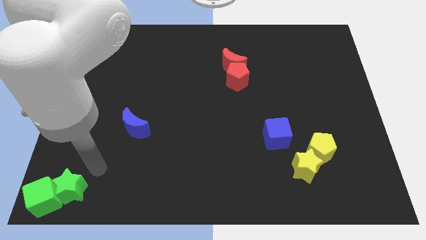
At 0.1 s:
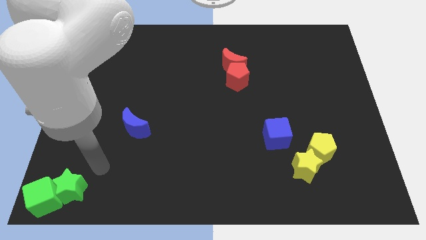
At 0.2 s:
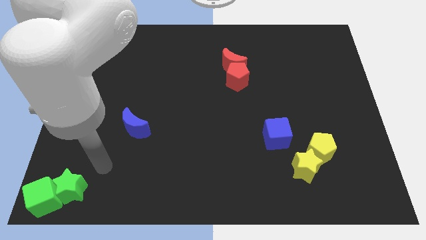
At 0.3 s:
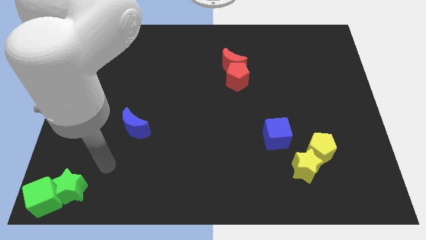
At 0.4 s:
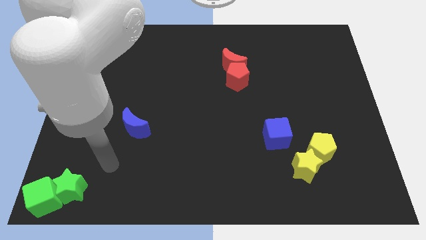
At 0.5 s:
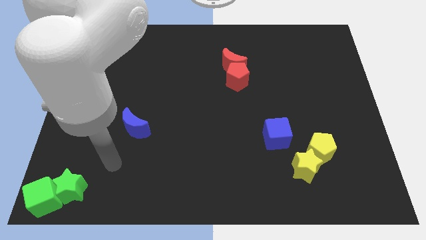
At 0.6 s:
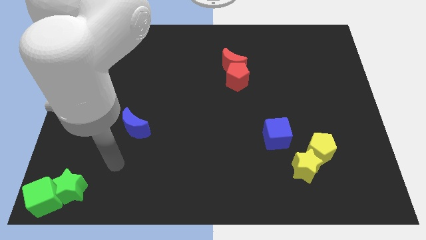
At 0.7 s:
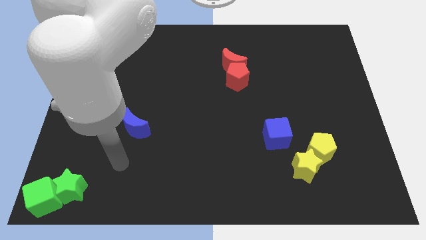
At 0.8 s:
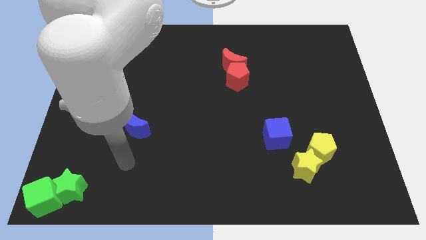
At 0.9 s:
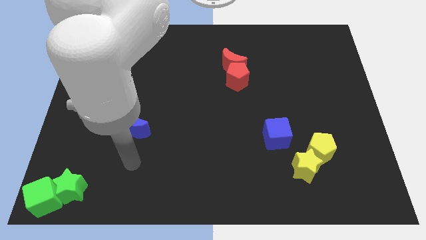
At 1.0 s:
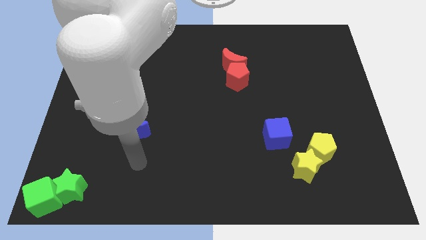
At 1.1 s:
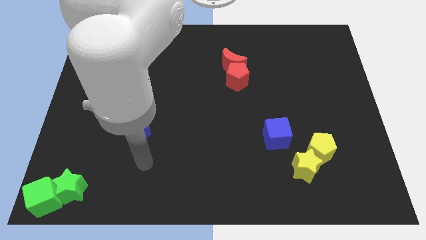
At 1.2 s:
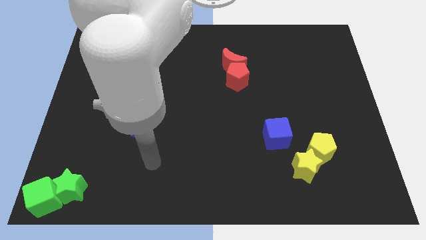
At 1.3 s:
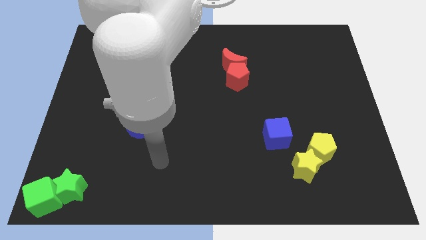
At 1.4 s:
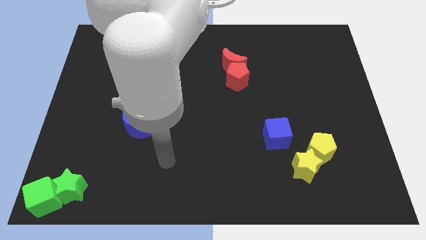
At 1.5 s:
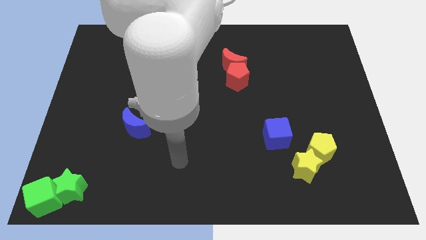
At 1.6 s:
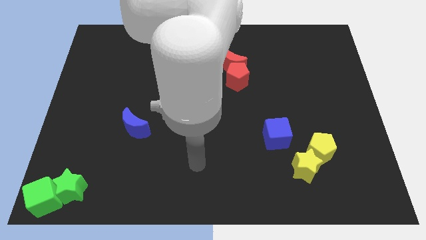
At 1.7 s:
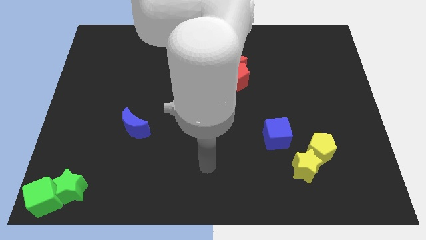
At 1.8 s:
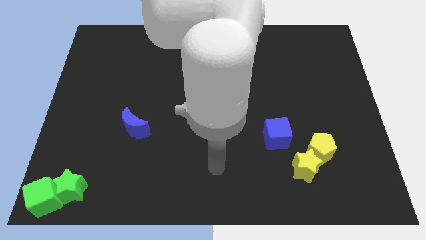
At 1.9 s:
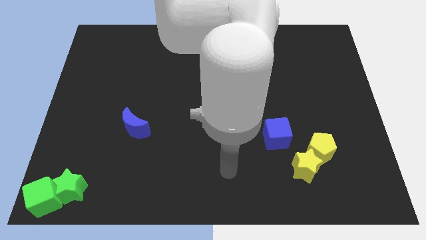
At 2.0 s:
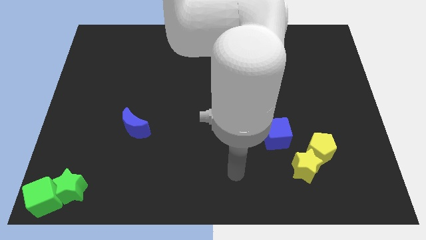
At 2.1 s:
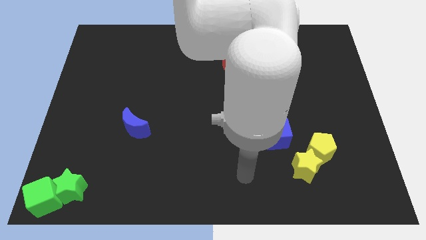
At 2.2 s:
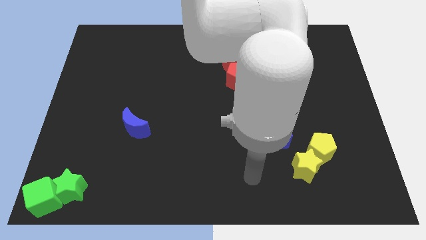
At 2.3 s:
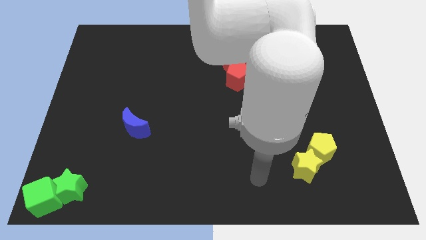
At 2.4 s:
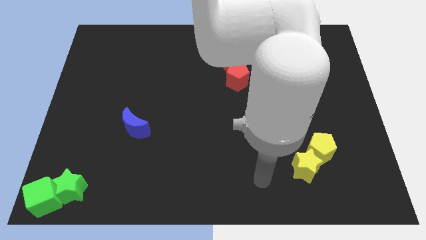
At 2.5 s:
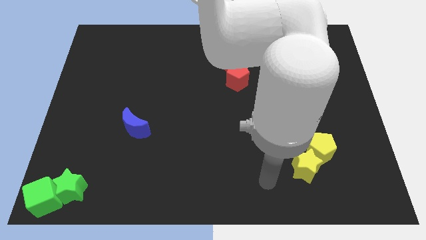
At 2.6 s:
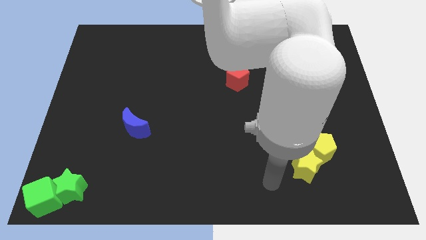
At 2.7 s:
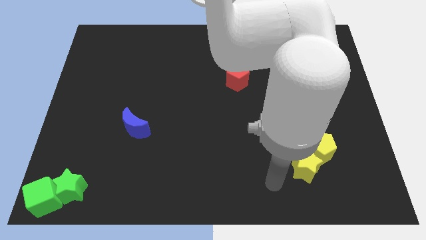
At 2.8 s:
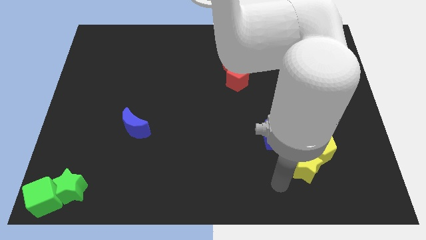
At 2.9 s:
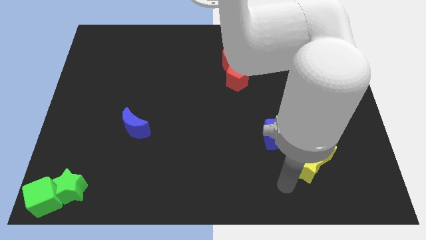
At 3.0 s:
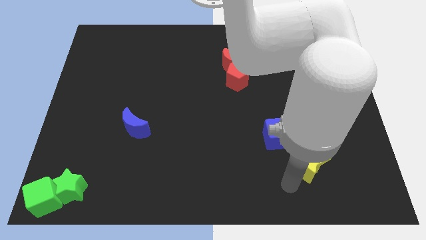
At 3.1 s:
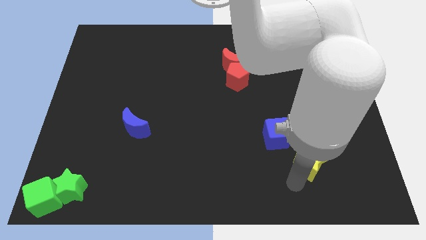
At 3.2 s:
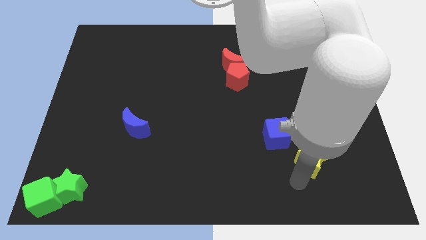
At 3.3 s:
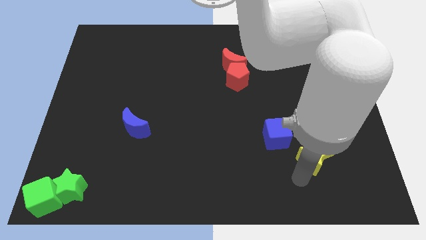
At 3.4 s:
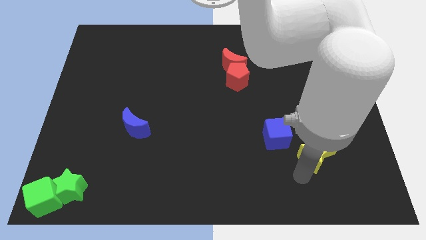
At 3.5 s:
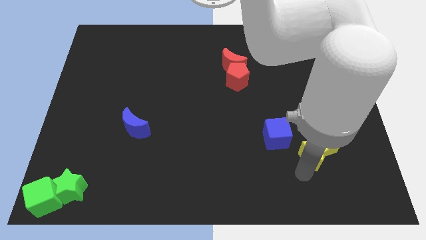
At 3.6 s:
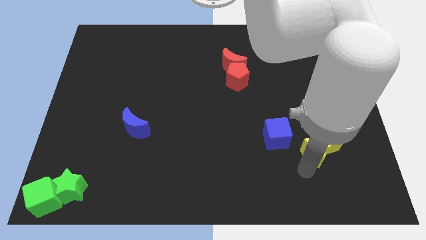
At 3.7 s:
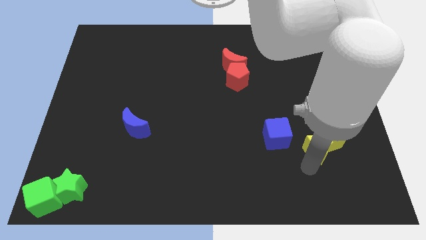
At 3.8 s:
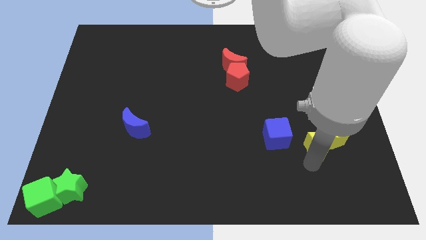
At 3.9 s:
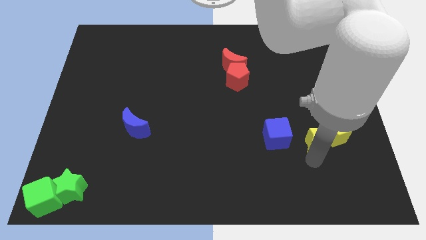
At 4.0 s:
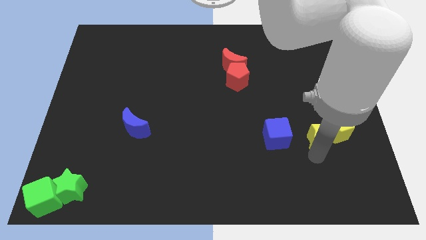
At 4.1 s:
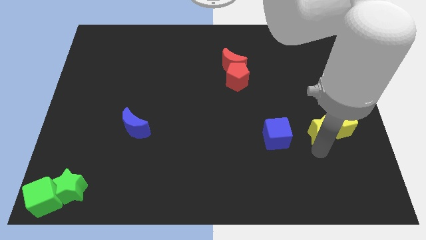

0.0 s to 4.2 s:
move the yellow blocks to the right of the blue cube

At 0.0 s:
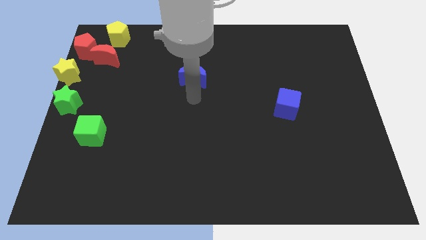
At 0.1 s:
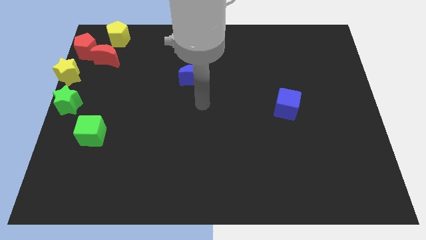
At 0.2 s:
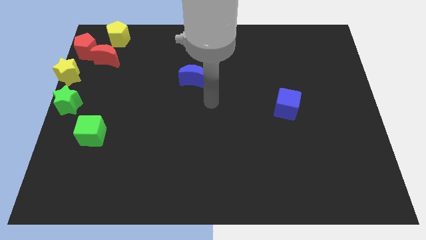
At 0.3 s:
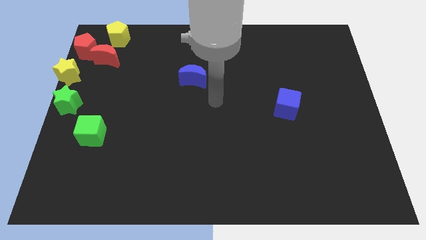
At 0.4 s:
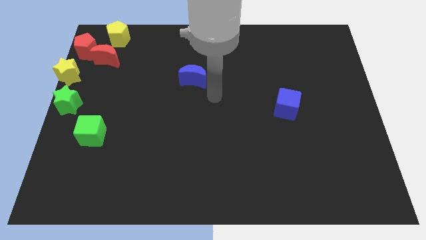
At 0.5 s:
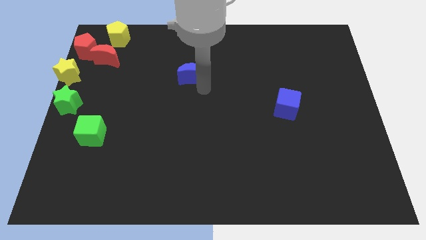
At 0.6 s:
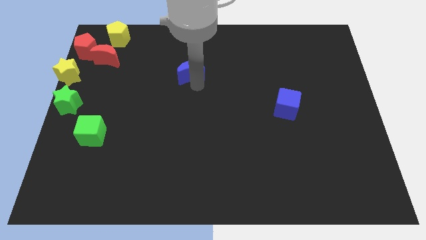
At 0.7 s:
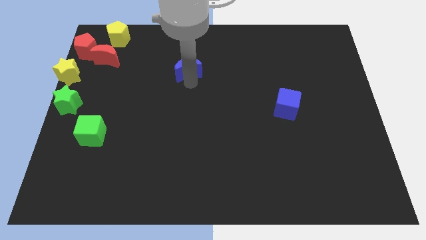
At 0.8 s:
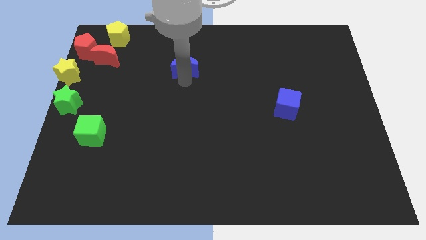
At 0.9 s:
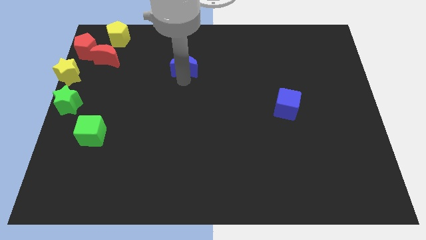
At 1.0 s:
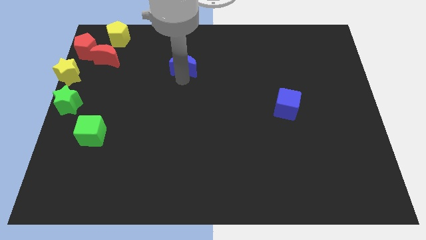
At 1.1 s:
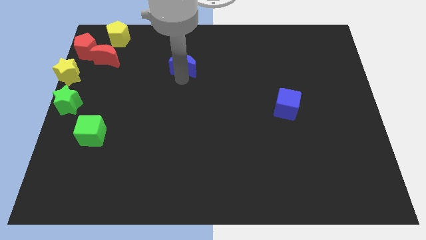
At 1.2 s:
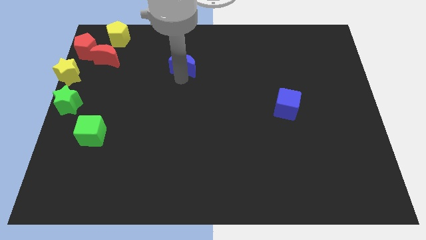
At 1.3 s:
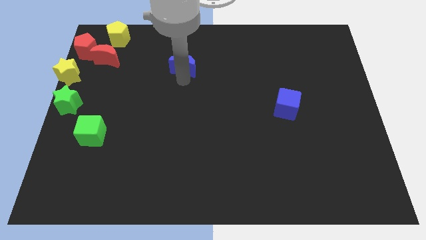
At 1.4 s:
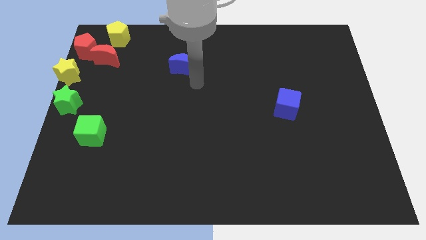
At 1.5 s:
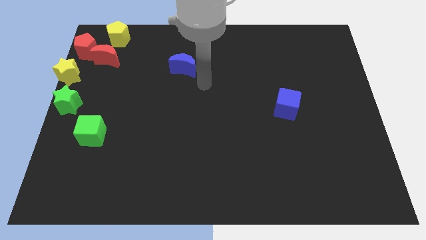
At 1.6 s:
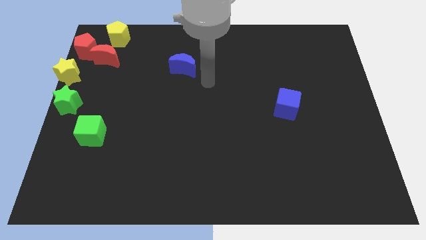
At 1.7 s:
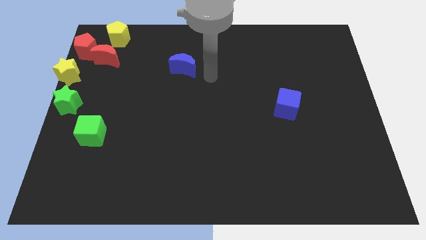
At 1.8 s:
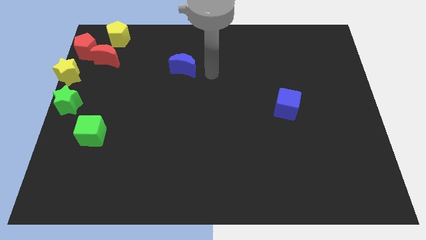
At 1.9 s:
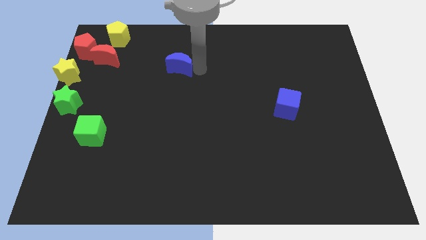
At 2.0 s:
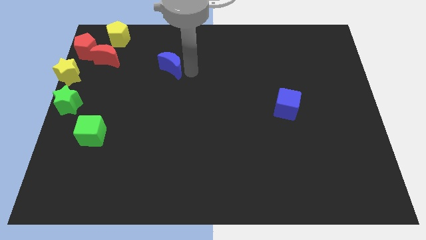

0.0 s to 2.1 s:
move blue crescent on the right side of the red crescent

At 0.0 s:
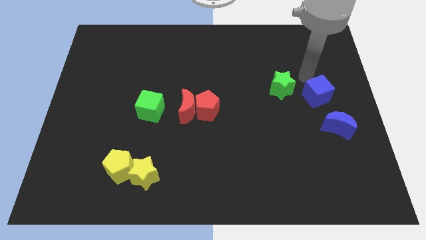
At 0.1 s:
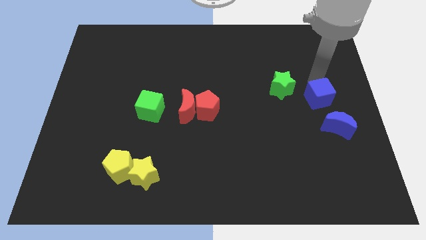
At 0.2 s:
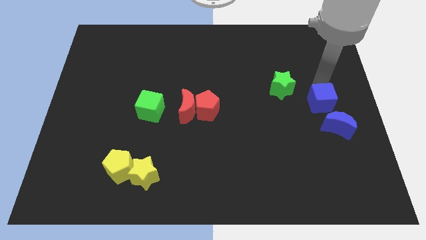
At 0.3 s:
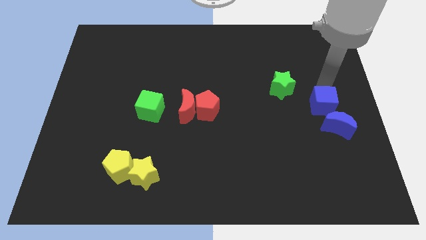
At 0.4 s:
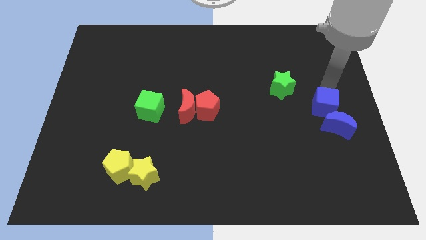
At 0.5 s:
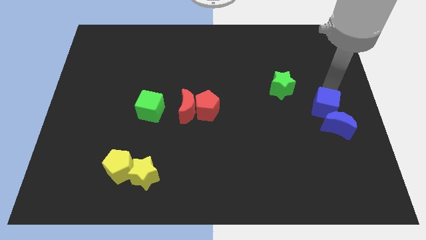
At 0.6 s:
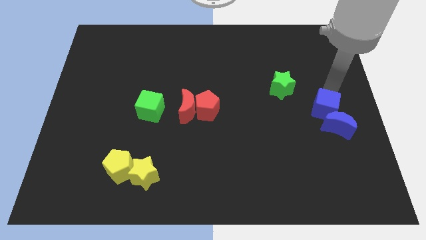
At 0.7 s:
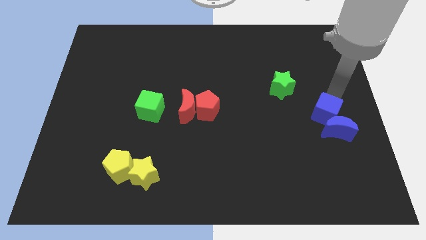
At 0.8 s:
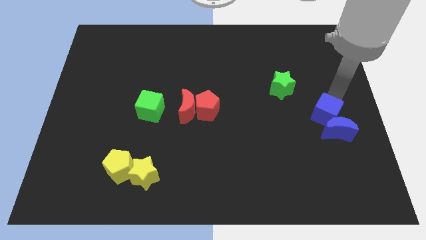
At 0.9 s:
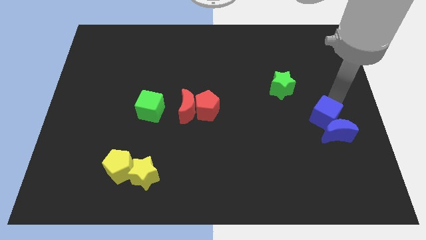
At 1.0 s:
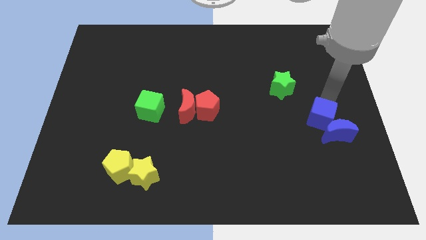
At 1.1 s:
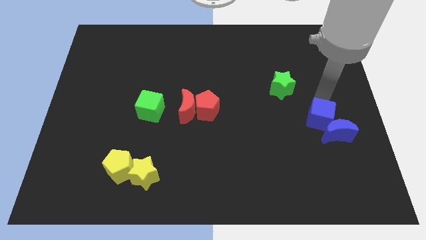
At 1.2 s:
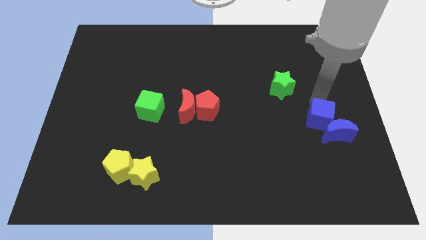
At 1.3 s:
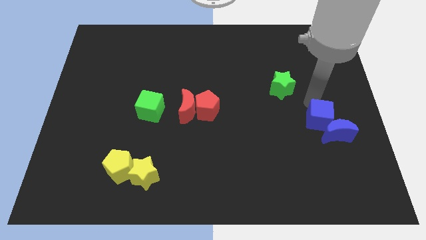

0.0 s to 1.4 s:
push the blue cube into the blue moon

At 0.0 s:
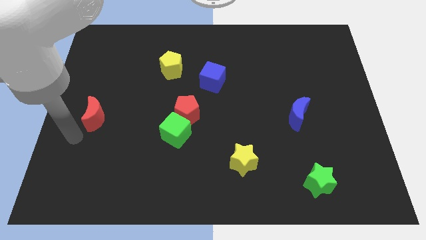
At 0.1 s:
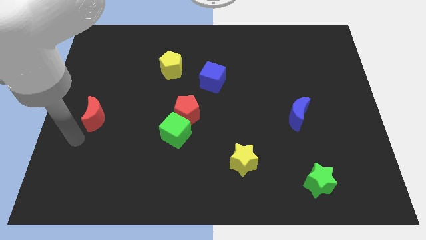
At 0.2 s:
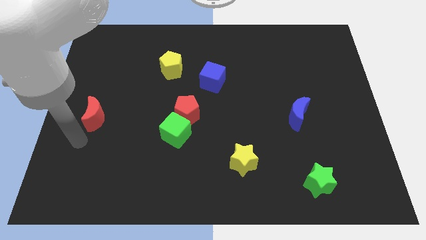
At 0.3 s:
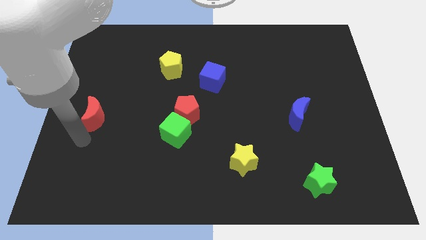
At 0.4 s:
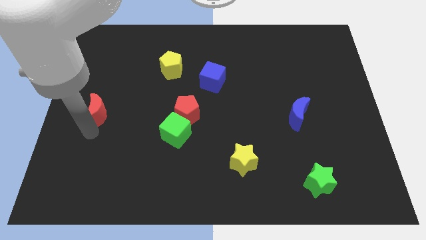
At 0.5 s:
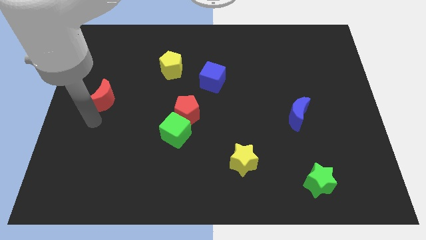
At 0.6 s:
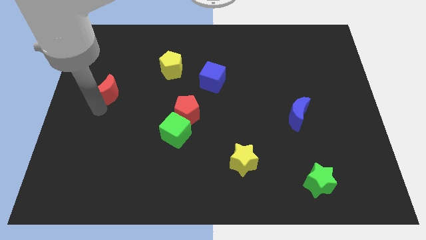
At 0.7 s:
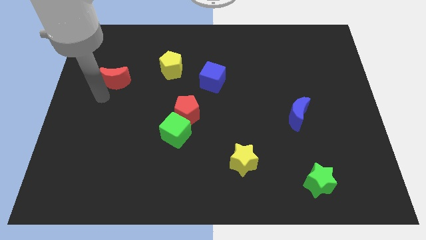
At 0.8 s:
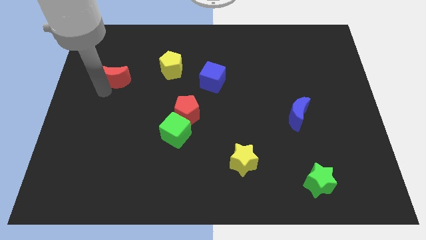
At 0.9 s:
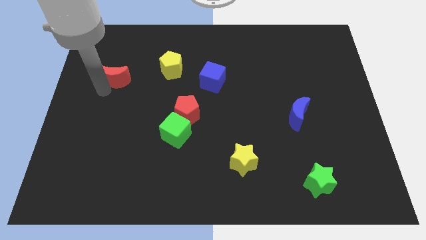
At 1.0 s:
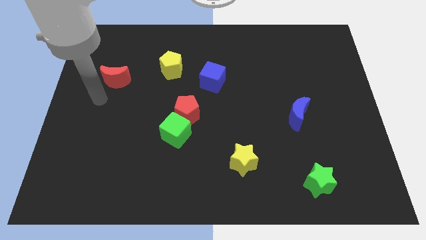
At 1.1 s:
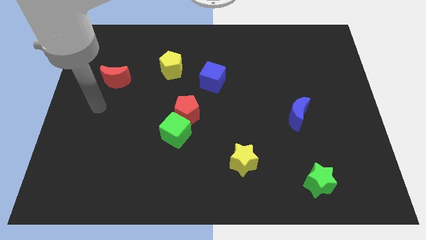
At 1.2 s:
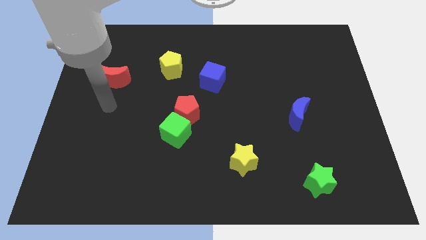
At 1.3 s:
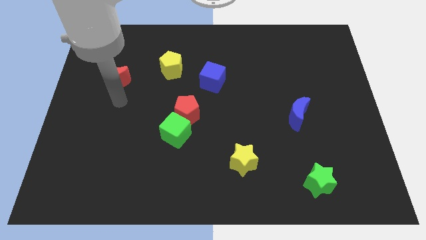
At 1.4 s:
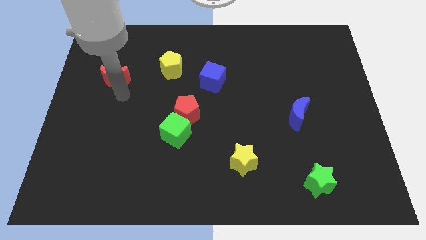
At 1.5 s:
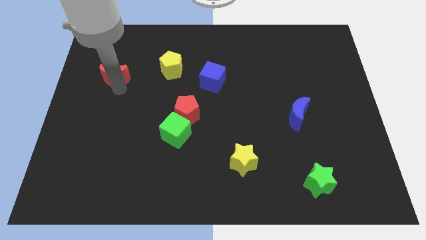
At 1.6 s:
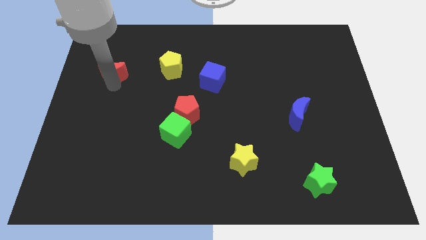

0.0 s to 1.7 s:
place the red moon diagonal to the left of the yellow pentagon
